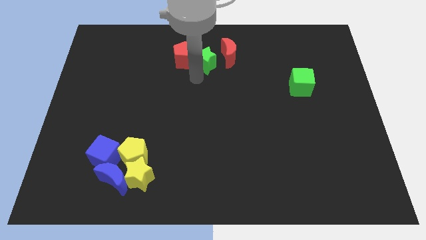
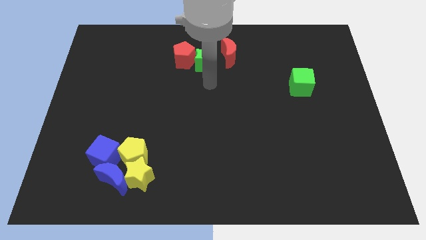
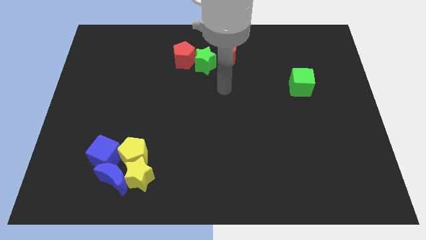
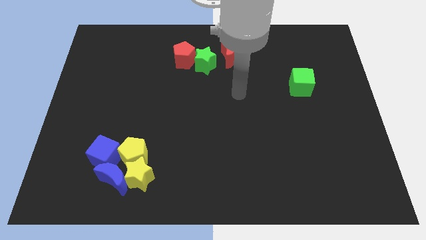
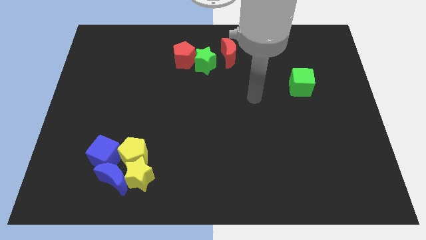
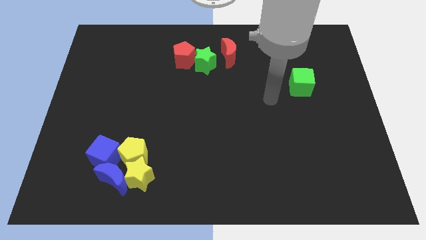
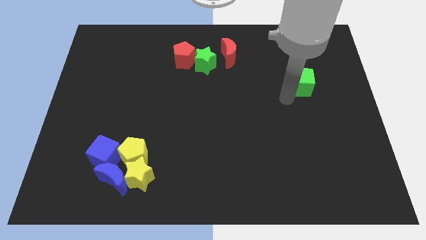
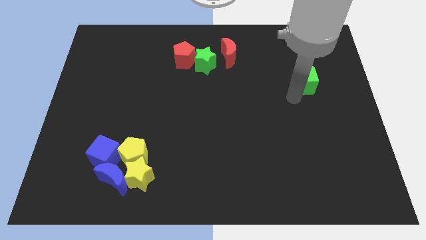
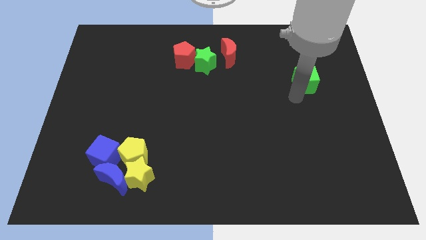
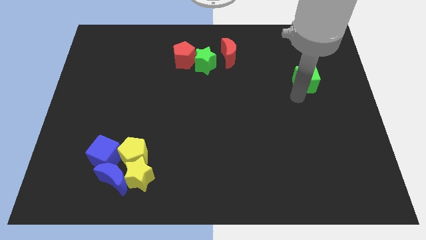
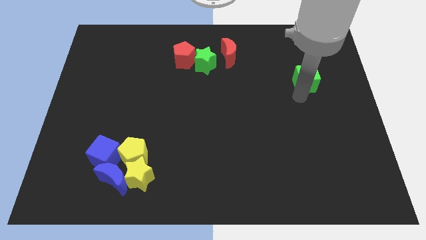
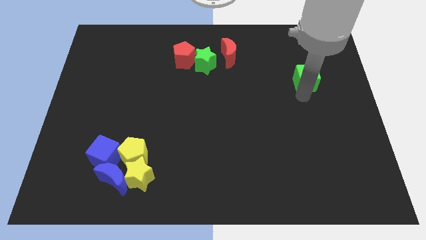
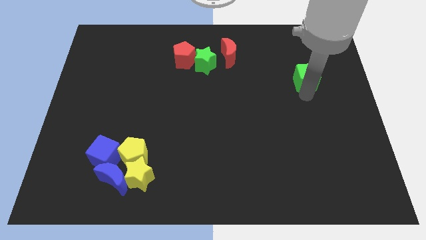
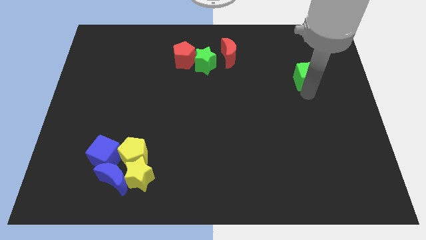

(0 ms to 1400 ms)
slightly push the green cube towards the top of the board

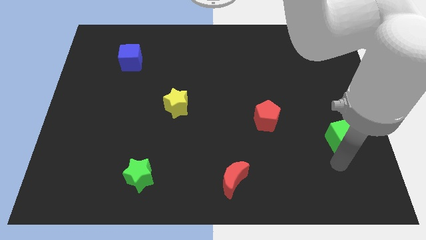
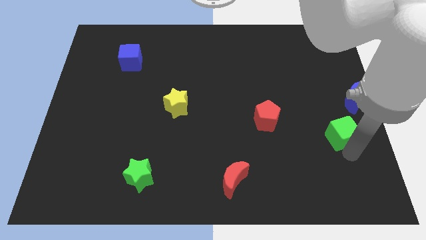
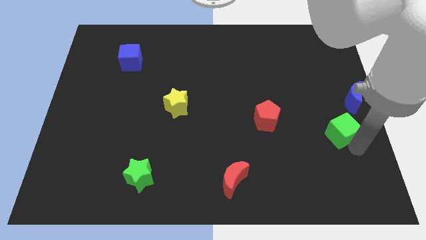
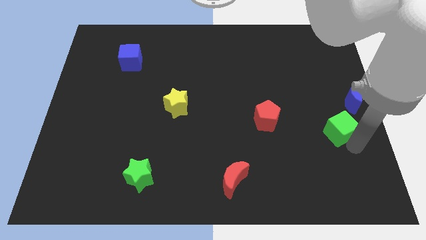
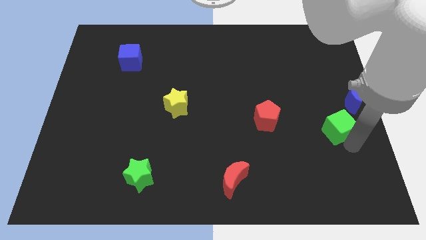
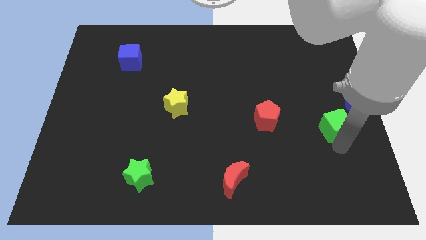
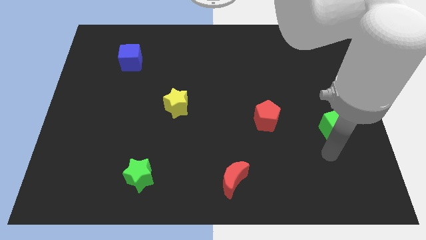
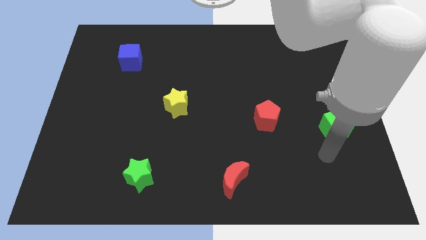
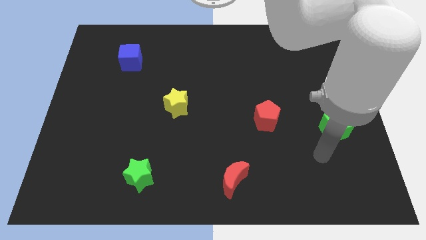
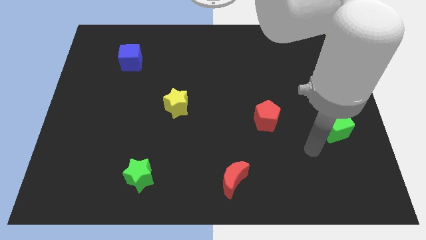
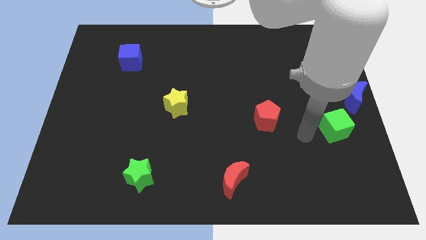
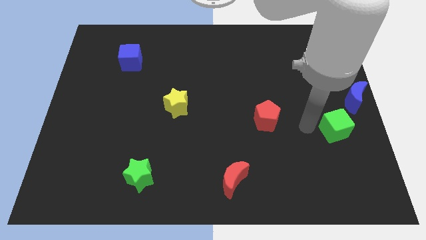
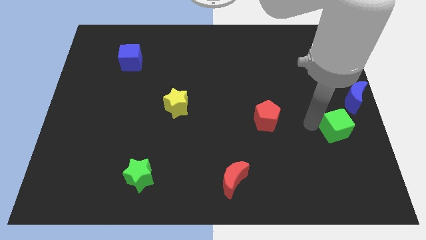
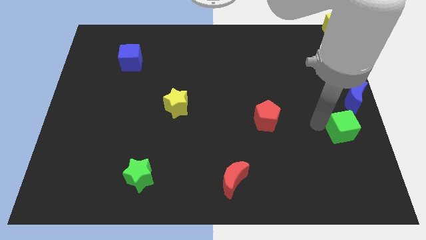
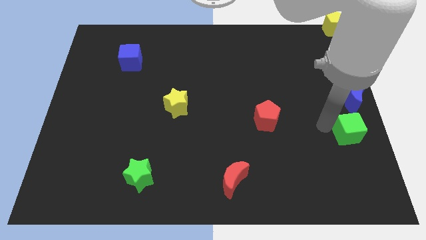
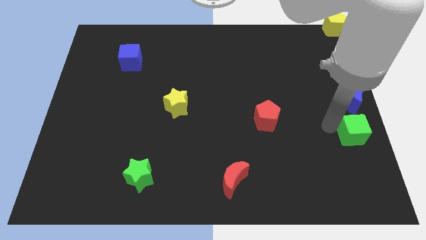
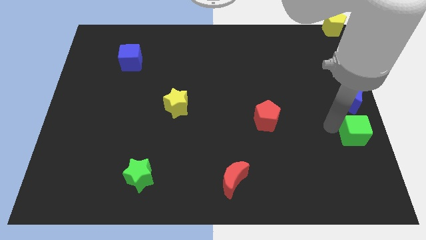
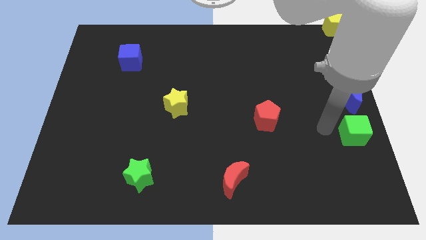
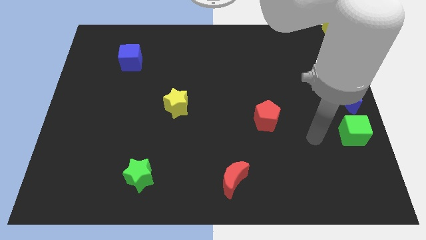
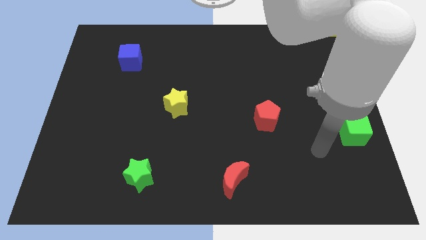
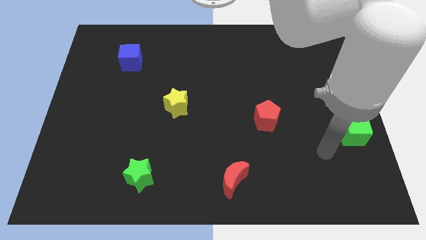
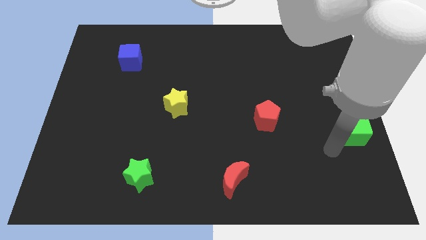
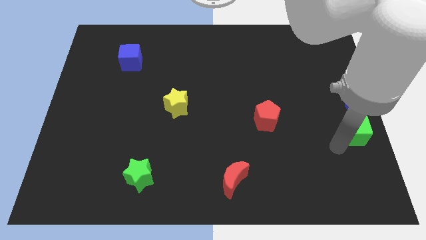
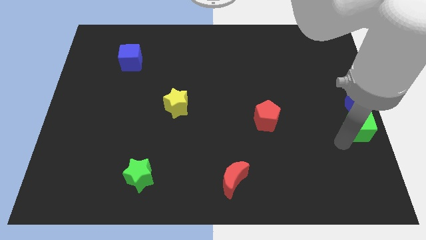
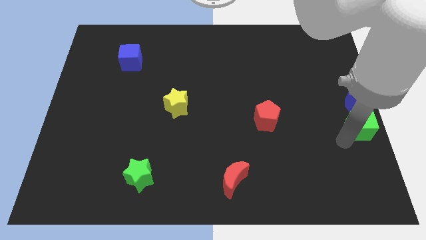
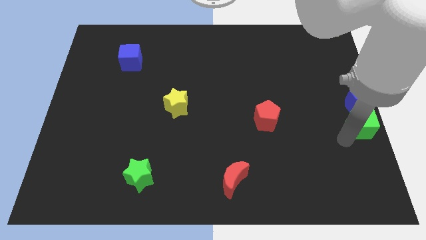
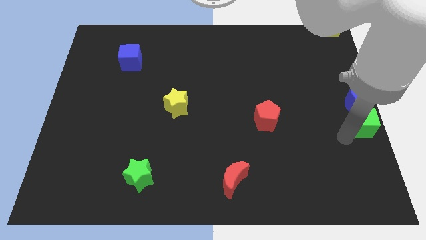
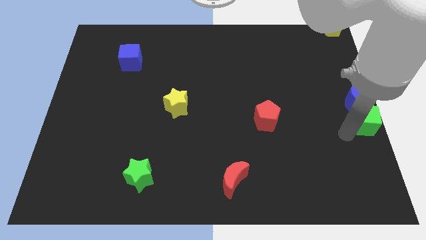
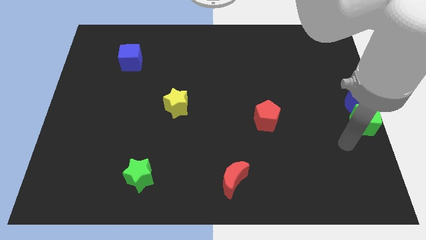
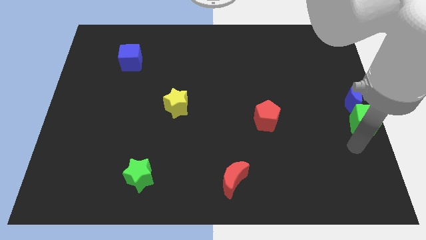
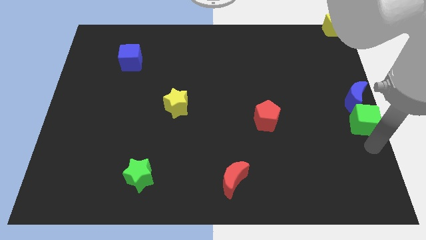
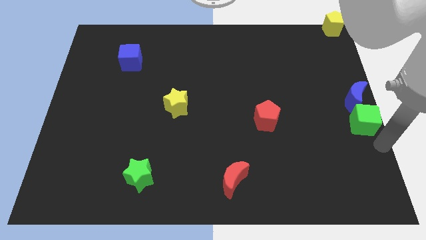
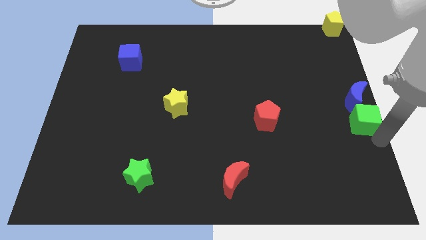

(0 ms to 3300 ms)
place the green cube to the bottom of the blue moon

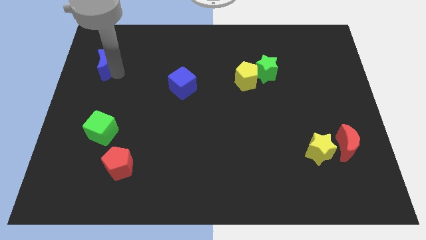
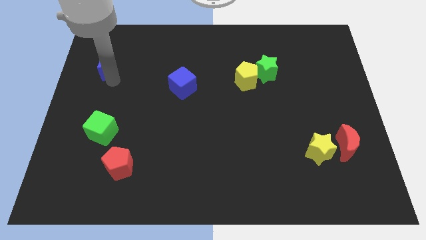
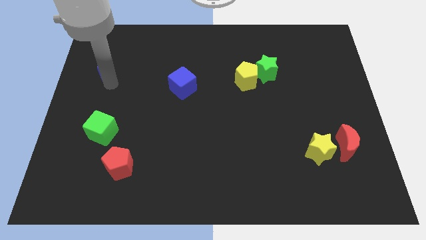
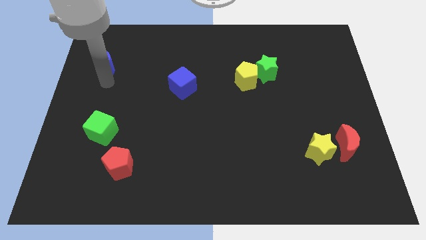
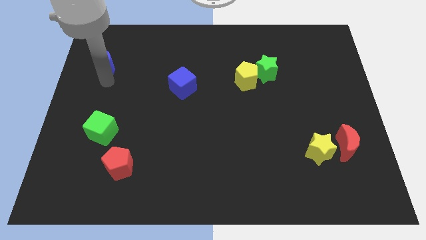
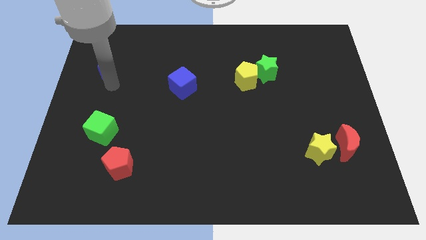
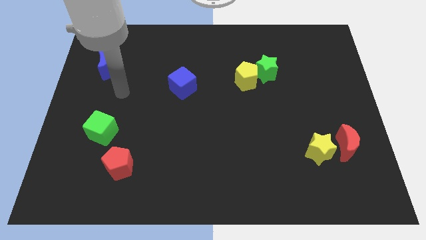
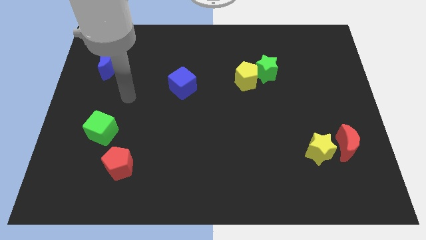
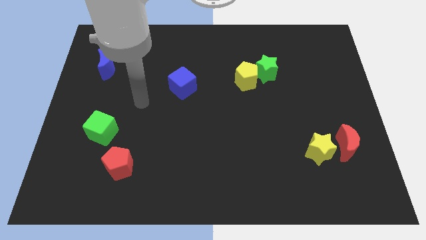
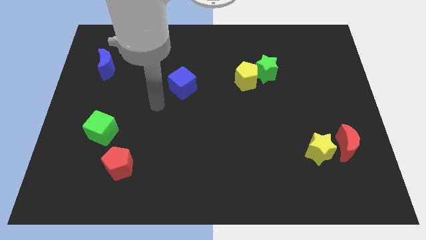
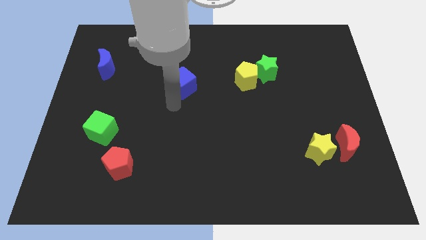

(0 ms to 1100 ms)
place the arm towards blue cube

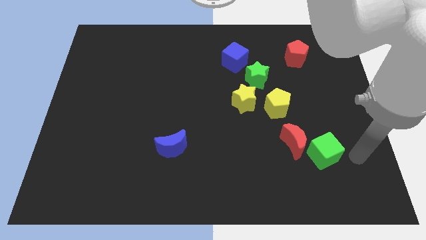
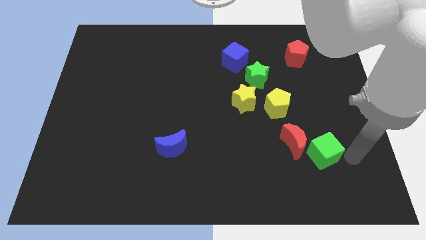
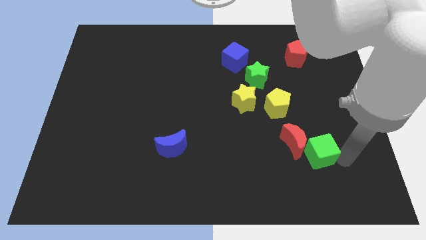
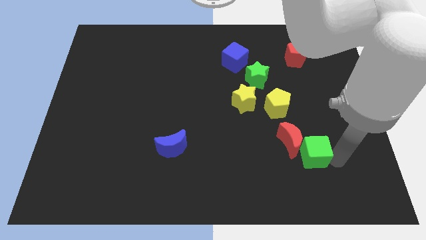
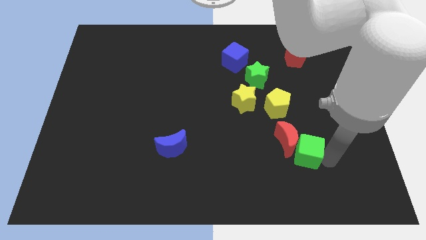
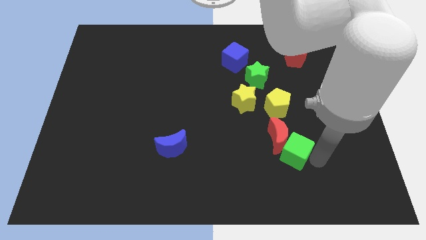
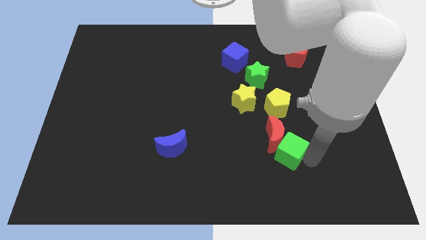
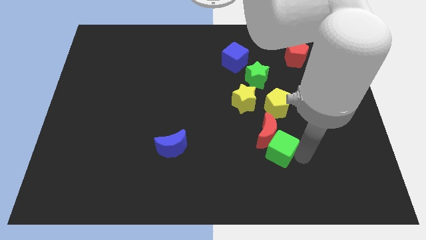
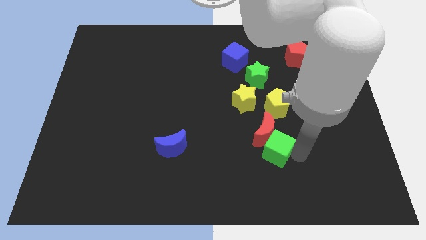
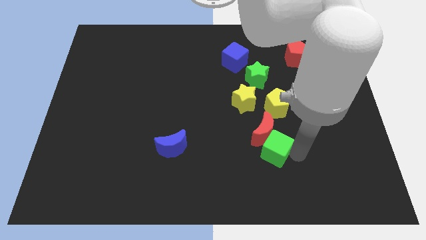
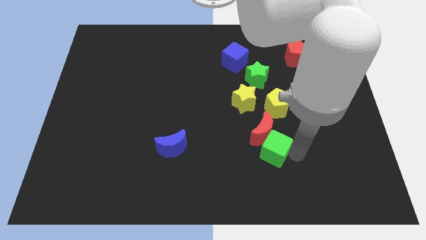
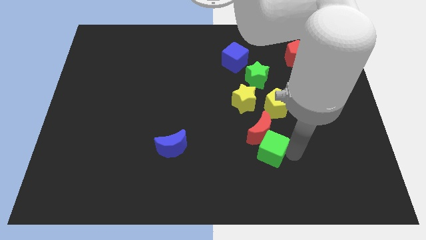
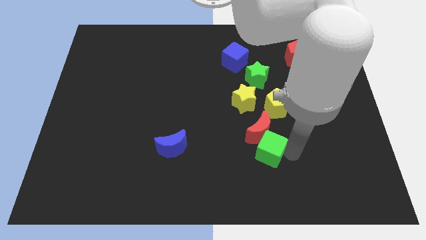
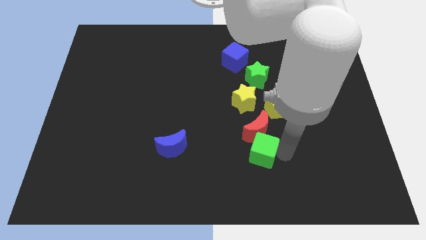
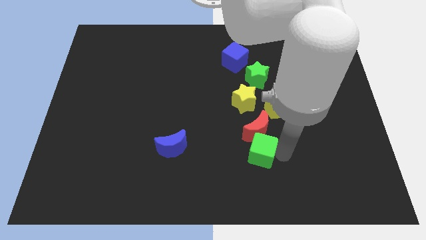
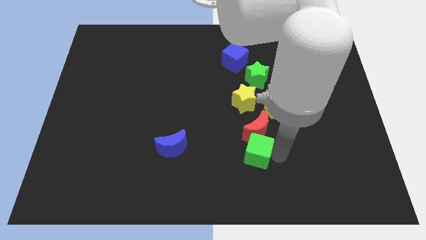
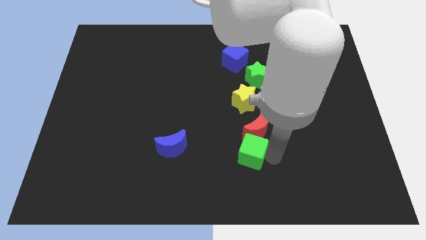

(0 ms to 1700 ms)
place the green cube below the red crsecent

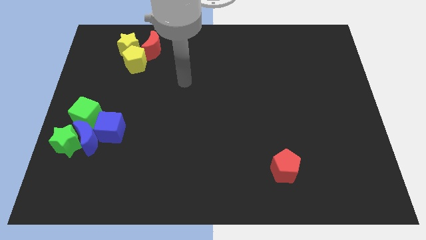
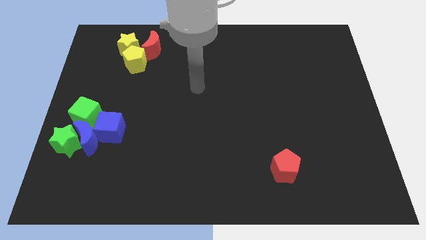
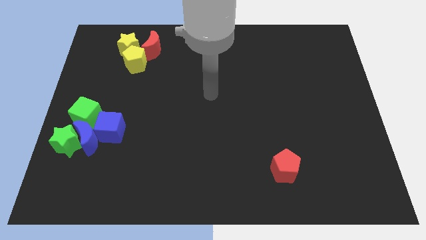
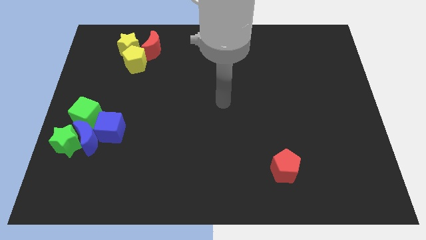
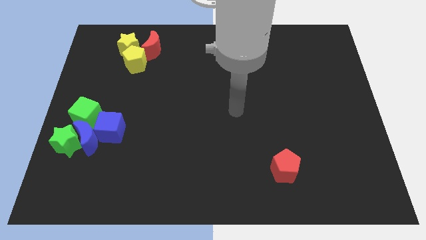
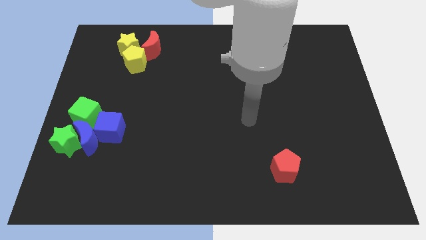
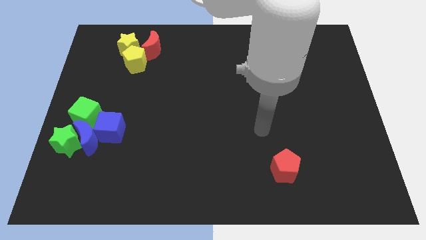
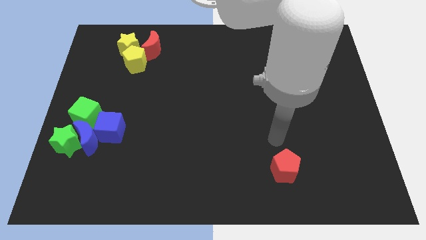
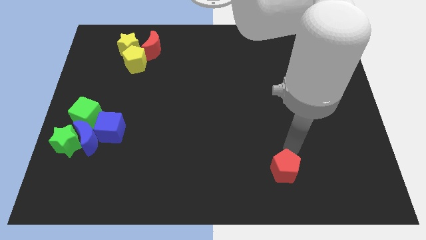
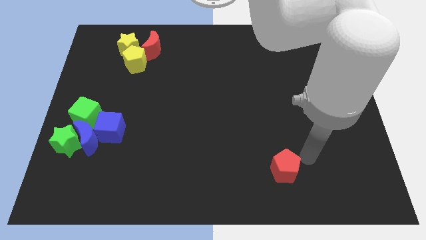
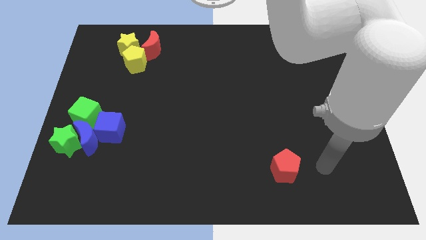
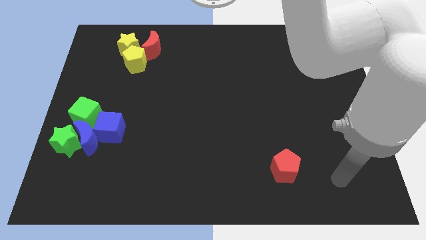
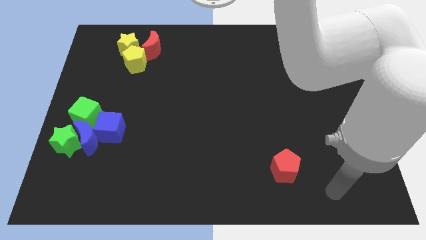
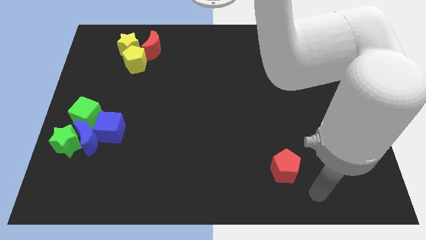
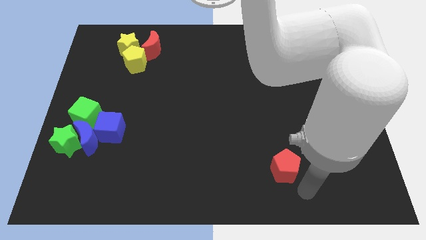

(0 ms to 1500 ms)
move your arm towards the red pentagon
